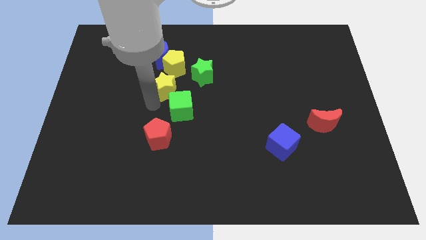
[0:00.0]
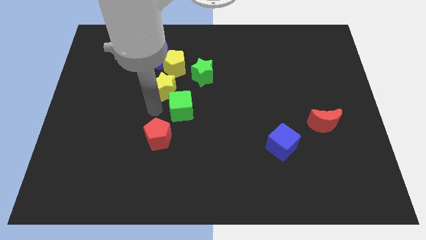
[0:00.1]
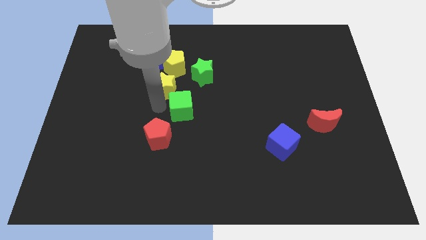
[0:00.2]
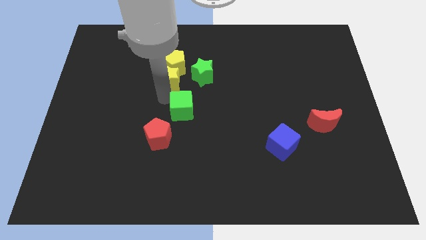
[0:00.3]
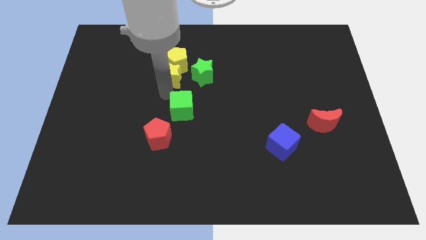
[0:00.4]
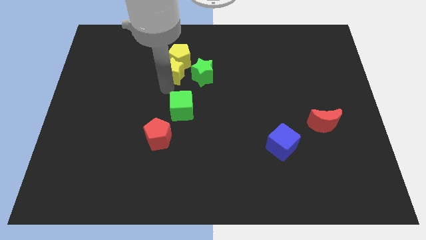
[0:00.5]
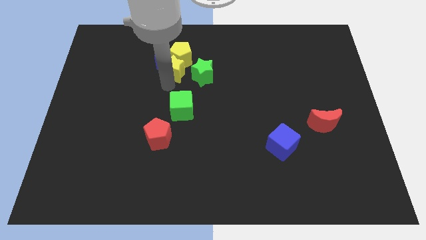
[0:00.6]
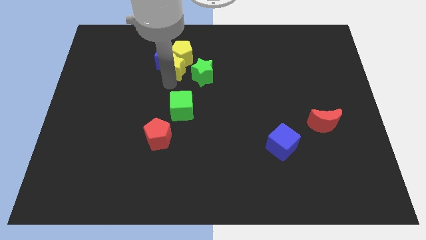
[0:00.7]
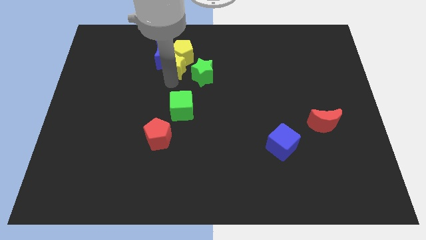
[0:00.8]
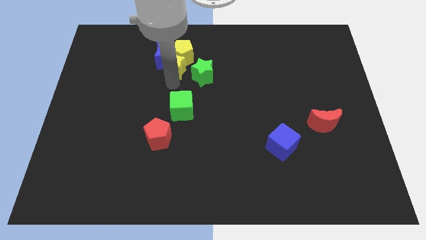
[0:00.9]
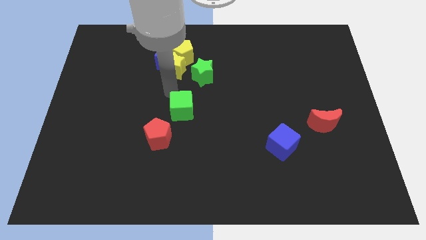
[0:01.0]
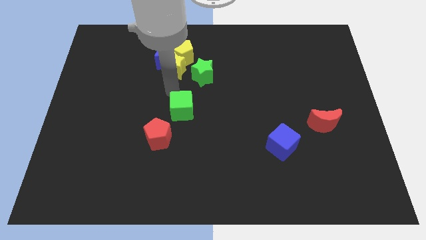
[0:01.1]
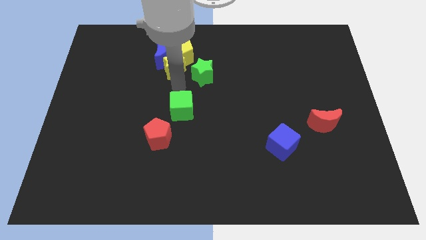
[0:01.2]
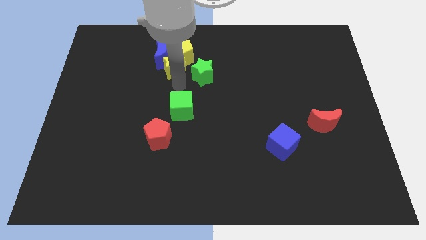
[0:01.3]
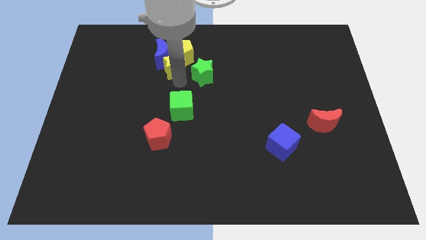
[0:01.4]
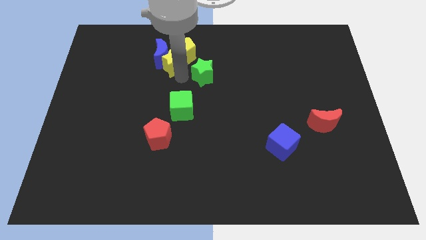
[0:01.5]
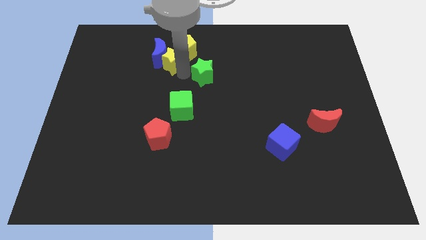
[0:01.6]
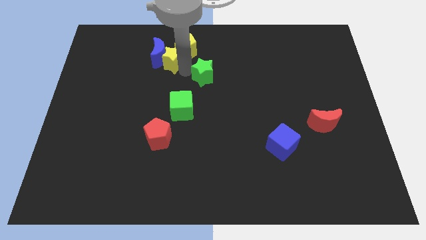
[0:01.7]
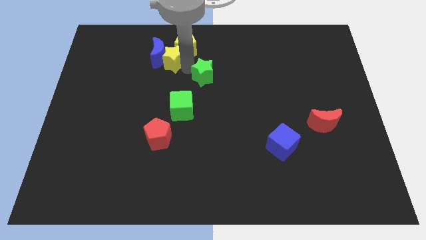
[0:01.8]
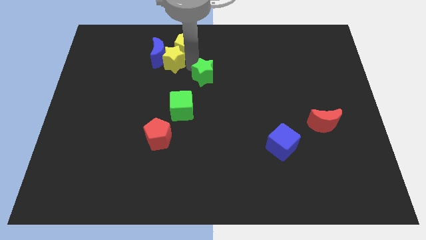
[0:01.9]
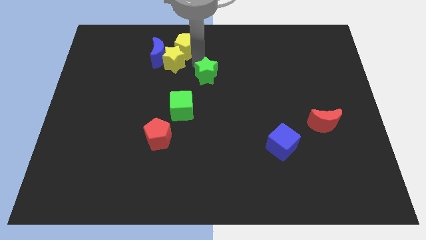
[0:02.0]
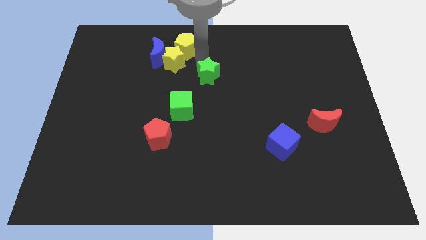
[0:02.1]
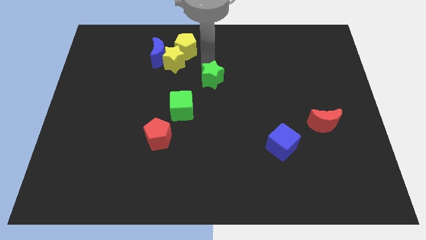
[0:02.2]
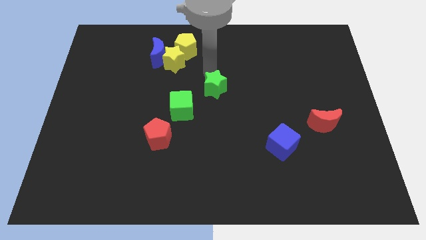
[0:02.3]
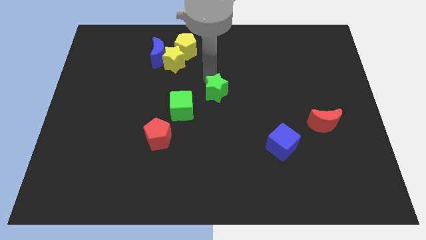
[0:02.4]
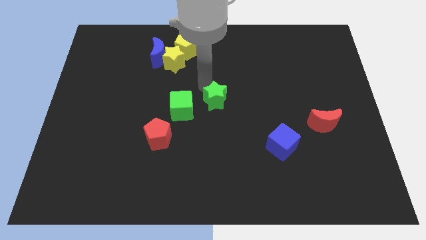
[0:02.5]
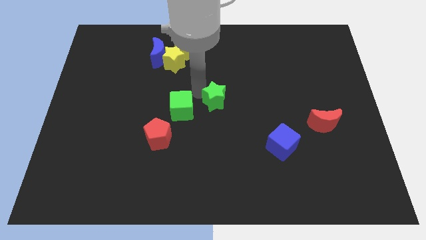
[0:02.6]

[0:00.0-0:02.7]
put the yellow blocks together

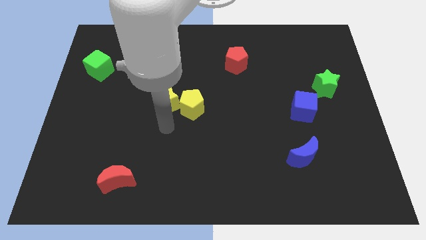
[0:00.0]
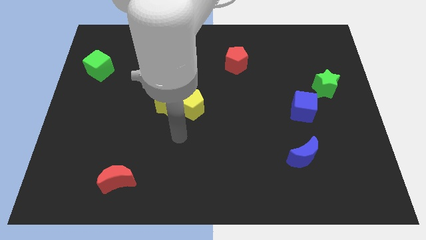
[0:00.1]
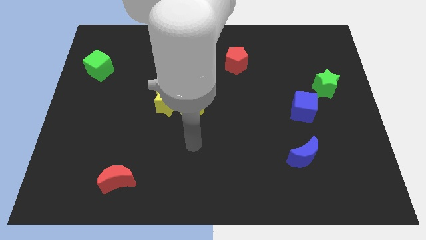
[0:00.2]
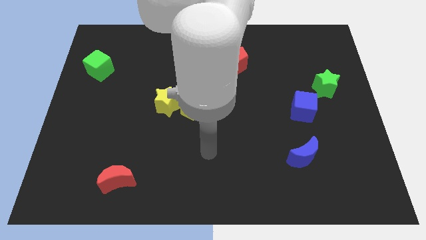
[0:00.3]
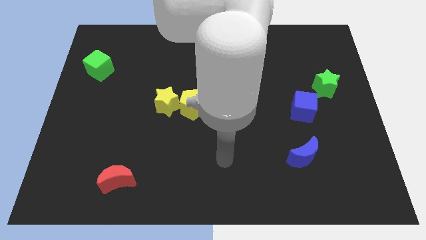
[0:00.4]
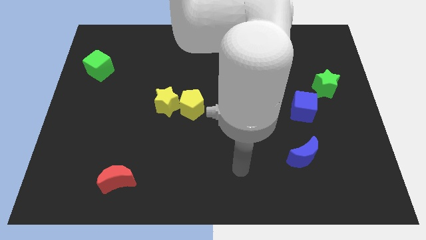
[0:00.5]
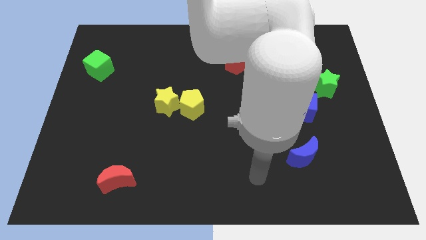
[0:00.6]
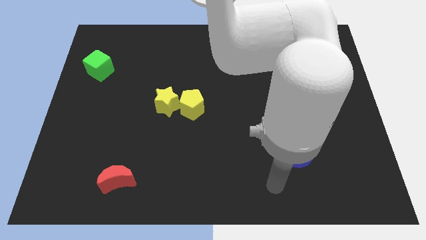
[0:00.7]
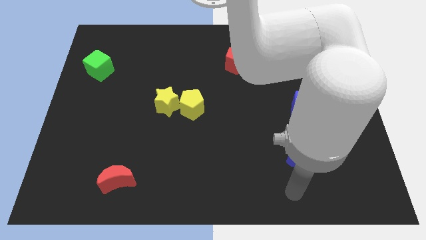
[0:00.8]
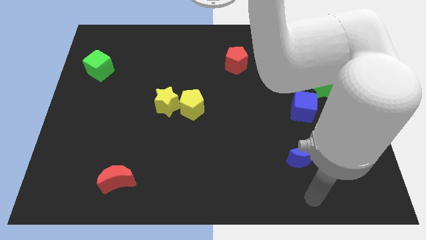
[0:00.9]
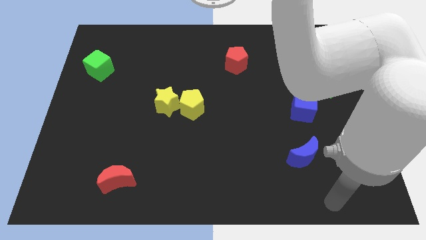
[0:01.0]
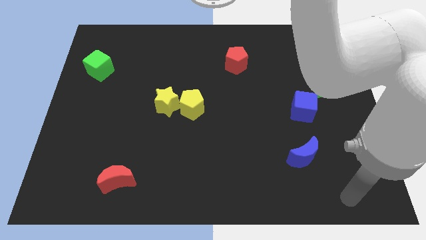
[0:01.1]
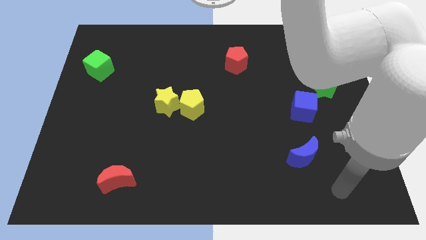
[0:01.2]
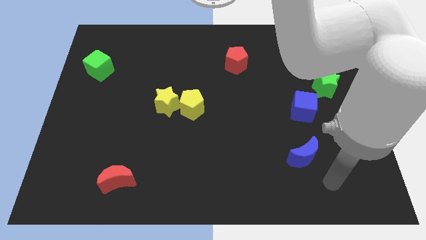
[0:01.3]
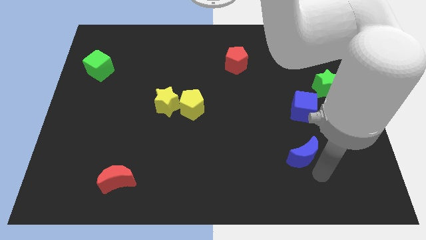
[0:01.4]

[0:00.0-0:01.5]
move around your arm towards the blue crescent

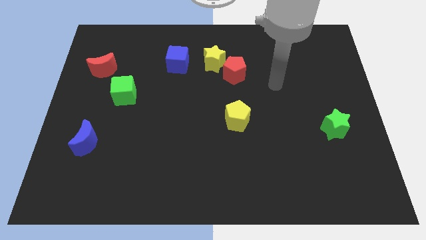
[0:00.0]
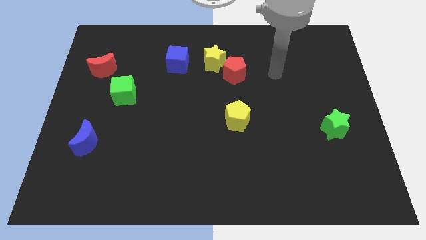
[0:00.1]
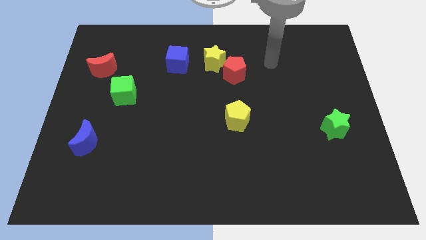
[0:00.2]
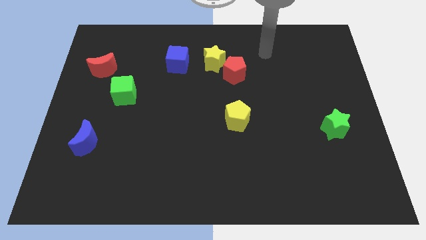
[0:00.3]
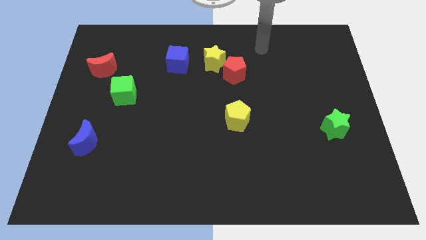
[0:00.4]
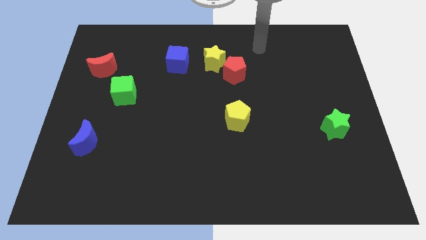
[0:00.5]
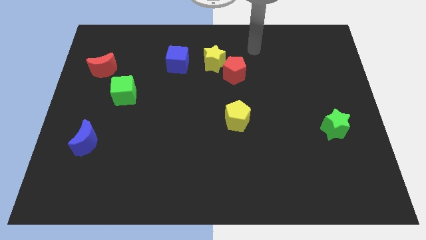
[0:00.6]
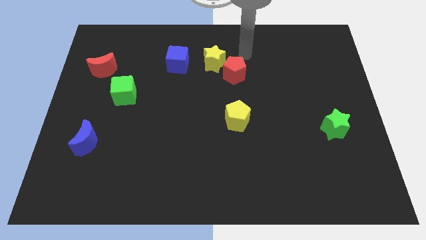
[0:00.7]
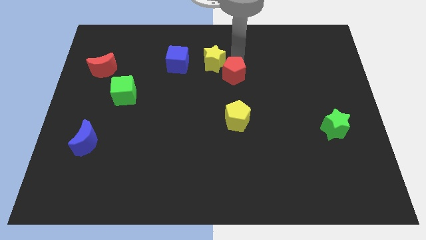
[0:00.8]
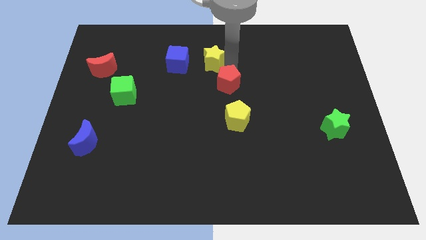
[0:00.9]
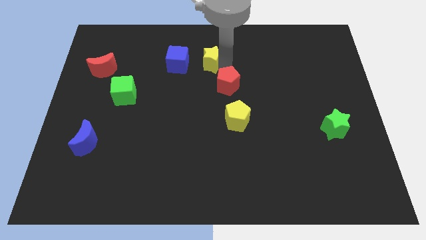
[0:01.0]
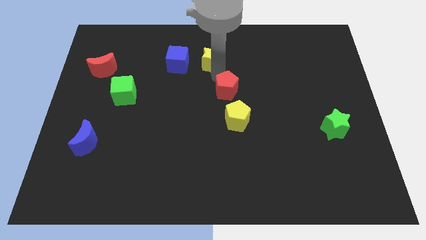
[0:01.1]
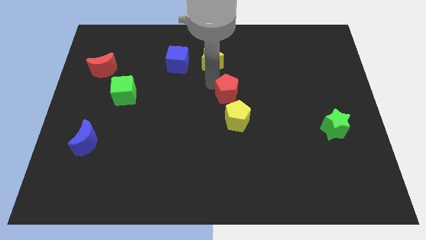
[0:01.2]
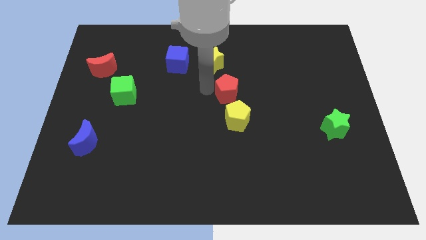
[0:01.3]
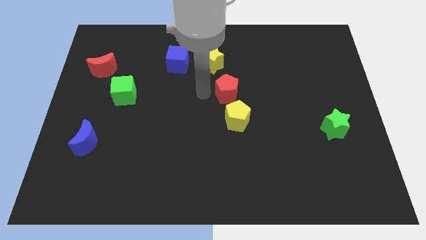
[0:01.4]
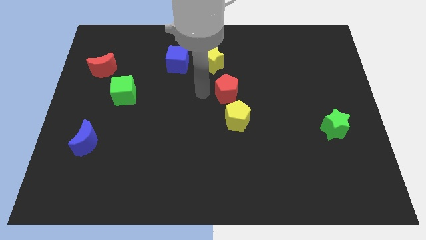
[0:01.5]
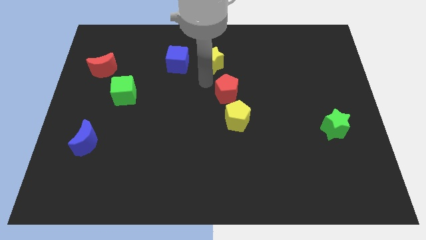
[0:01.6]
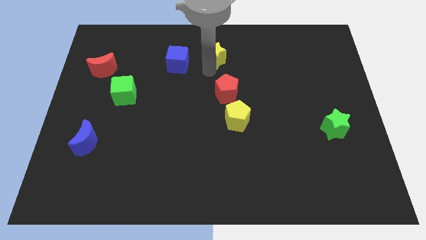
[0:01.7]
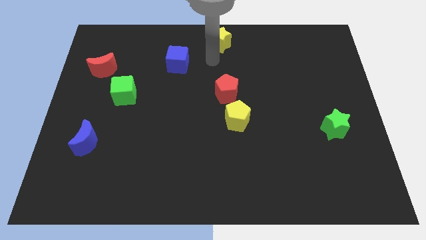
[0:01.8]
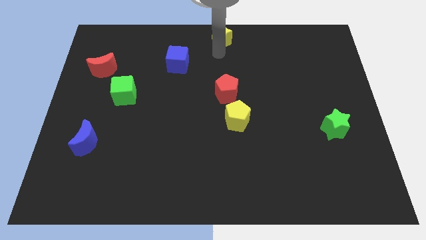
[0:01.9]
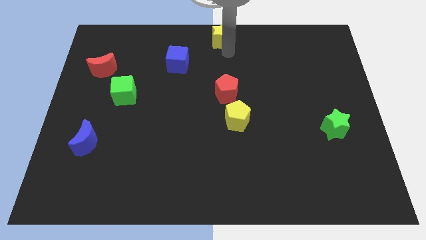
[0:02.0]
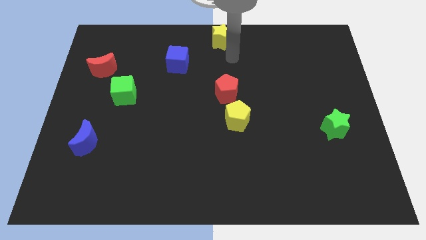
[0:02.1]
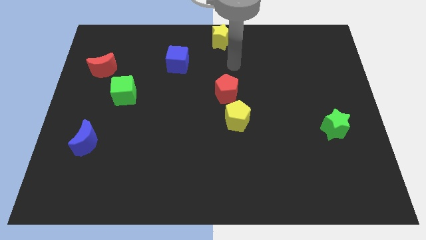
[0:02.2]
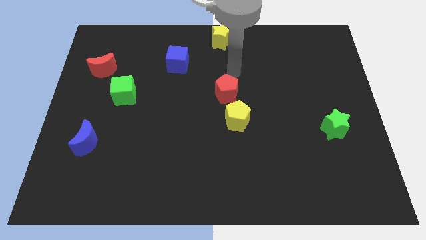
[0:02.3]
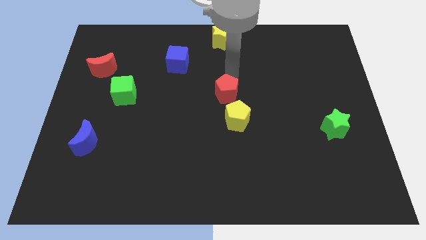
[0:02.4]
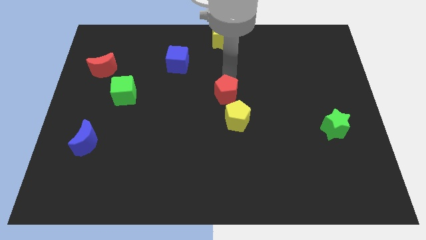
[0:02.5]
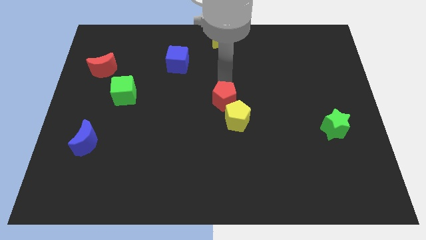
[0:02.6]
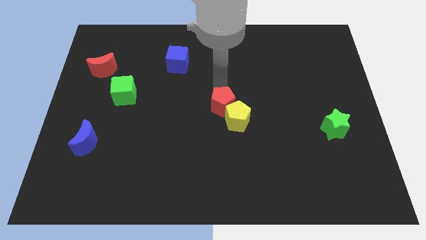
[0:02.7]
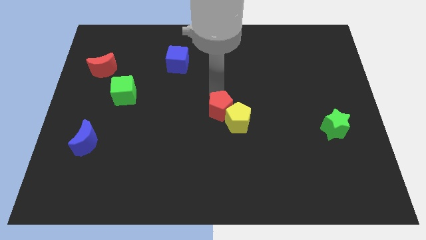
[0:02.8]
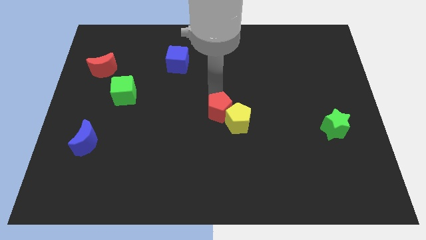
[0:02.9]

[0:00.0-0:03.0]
move red pentagon into yellow pentagon

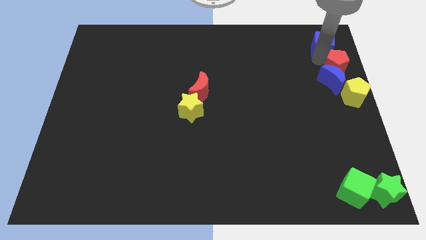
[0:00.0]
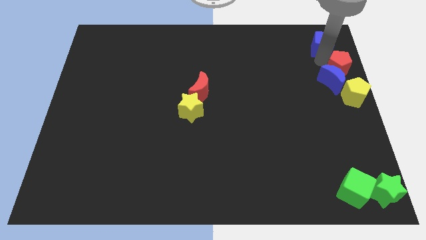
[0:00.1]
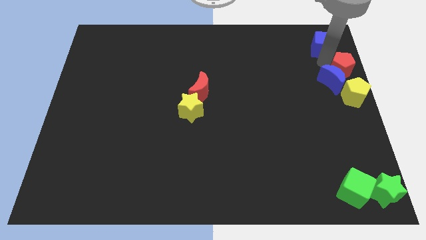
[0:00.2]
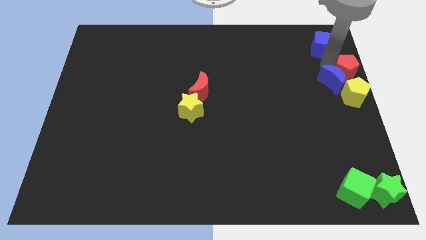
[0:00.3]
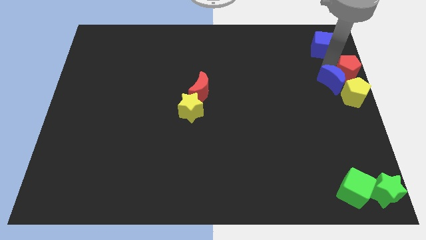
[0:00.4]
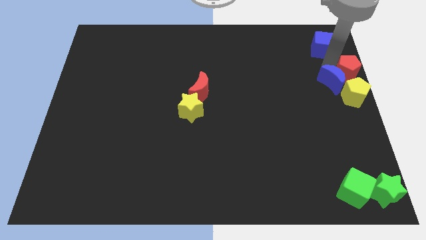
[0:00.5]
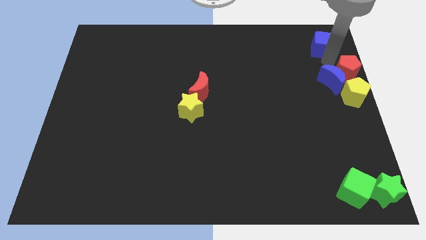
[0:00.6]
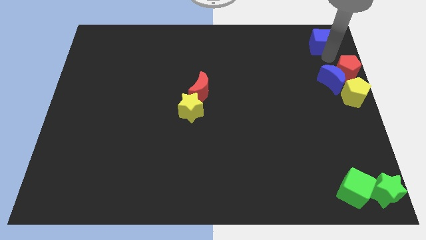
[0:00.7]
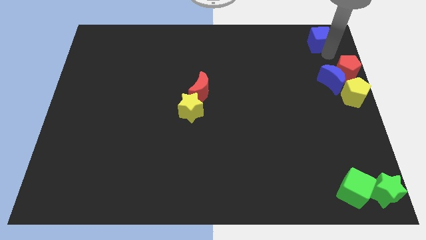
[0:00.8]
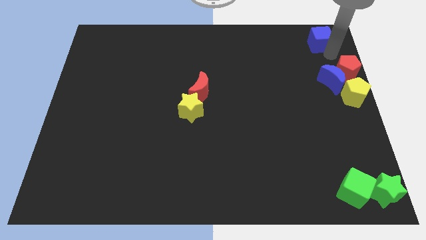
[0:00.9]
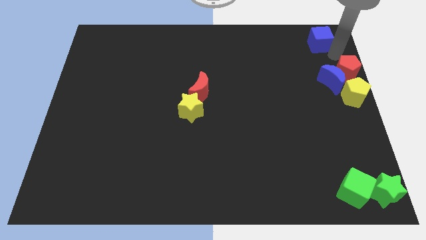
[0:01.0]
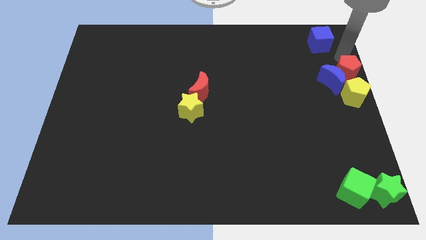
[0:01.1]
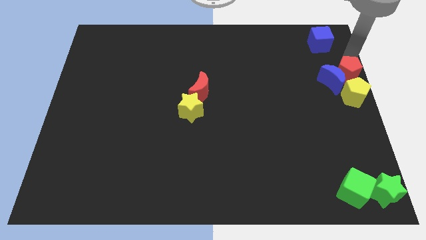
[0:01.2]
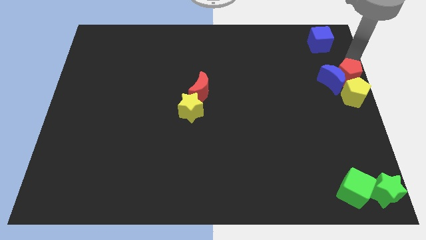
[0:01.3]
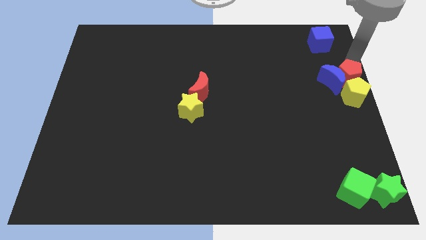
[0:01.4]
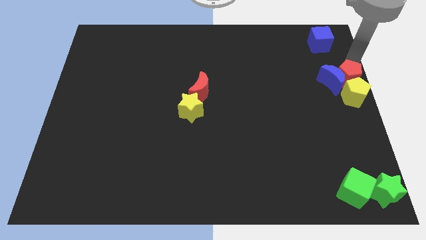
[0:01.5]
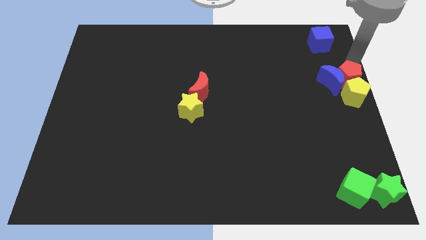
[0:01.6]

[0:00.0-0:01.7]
move the red pentagon to the top of the yellow pentagon

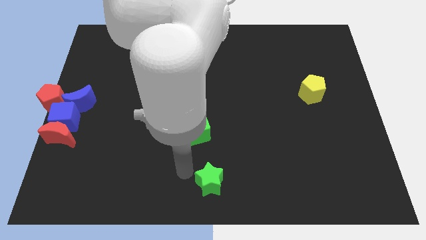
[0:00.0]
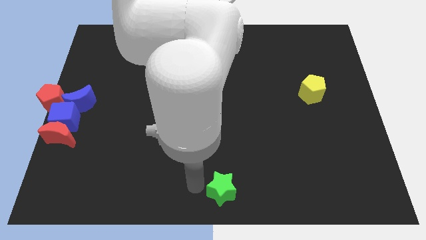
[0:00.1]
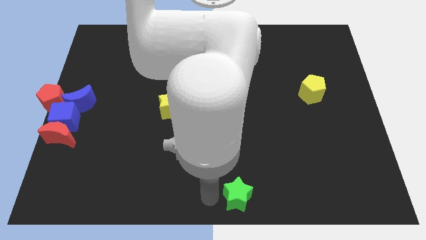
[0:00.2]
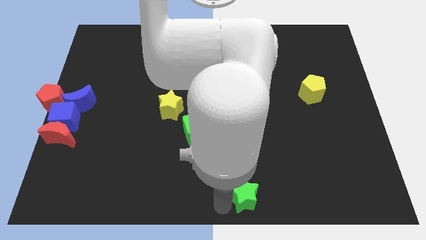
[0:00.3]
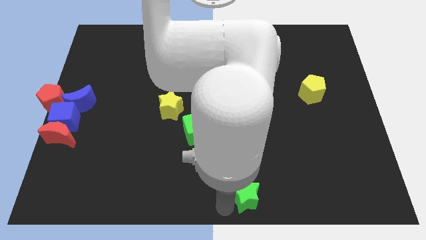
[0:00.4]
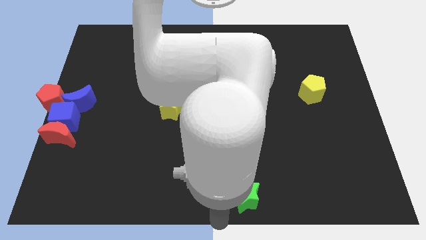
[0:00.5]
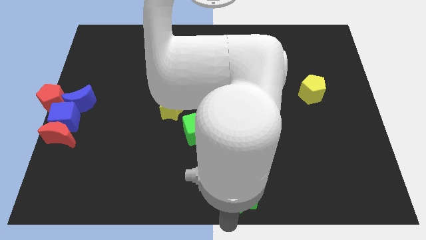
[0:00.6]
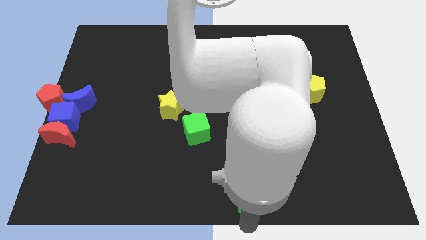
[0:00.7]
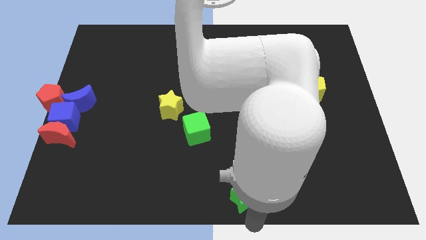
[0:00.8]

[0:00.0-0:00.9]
move green star to the bottom middle of the board
